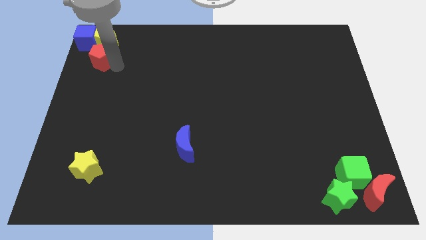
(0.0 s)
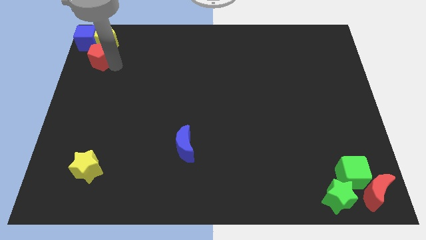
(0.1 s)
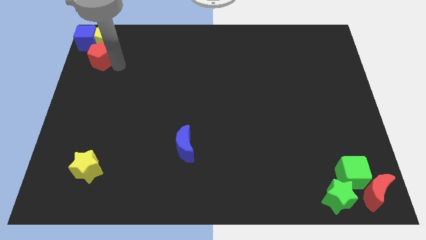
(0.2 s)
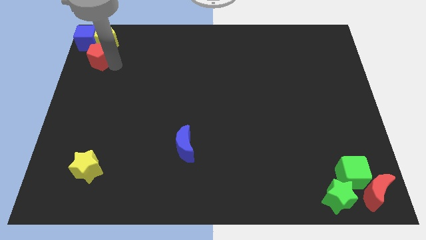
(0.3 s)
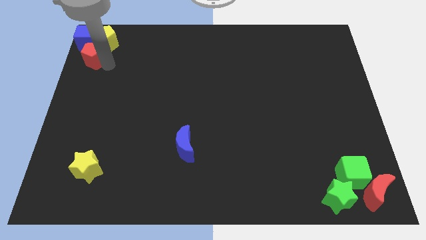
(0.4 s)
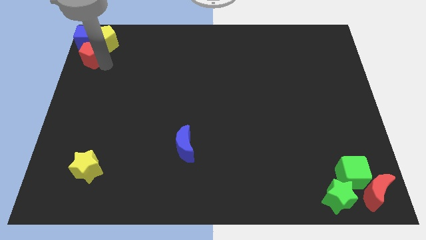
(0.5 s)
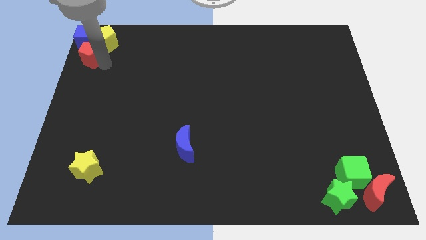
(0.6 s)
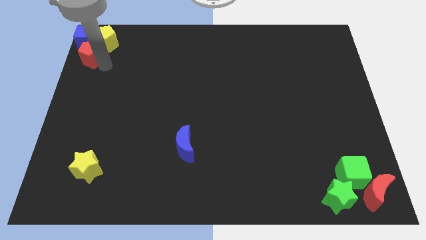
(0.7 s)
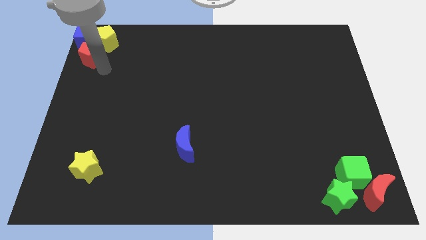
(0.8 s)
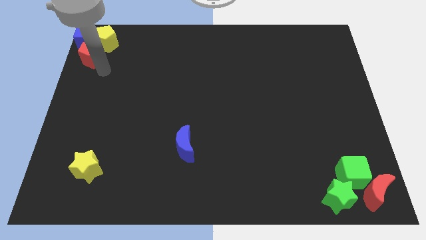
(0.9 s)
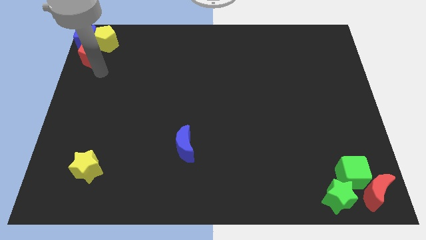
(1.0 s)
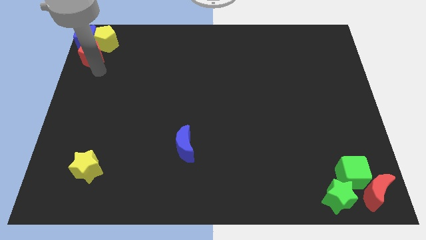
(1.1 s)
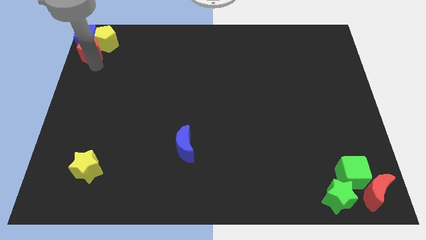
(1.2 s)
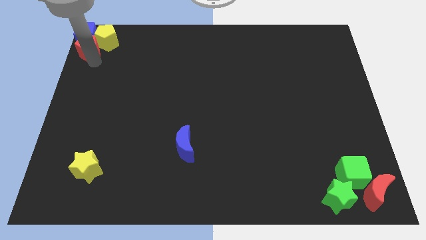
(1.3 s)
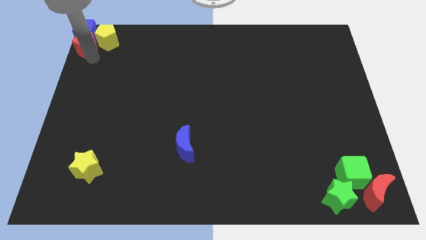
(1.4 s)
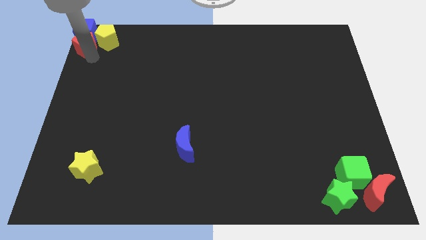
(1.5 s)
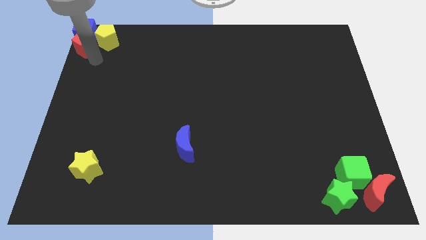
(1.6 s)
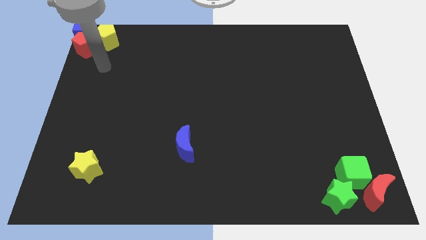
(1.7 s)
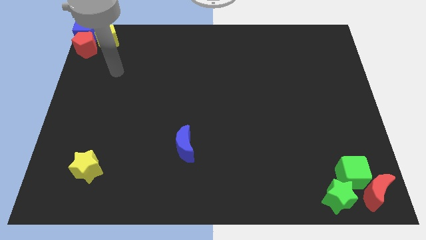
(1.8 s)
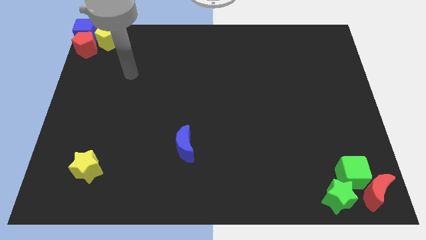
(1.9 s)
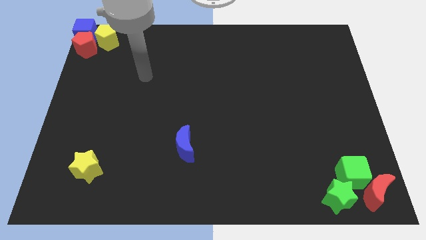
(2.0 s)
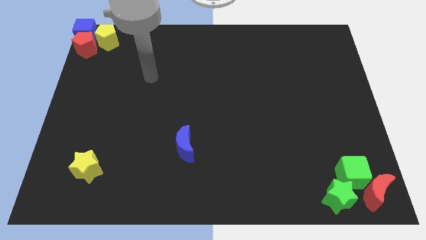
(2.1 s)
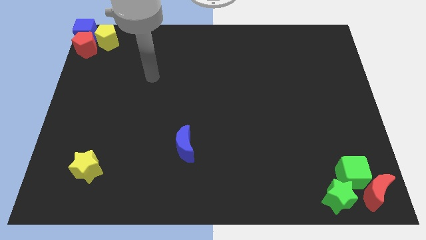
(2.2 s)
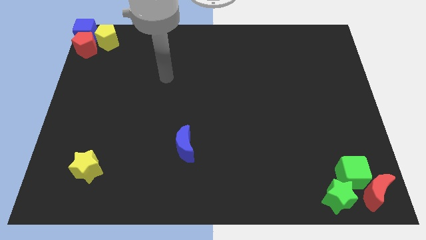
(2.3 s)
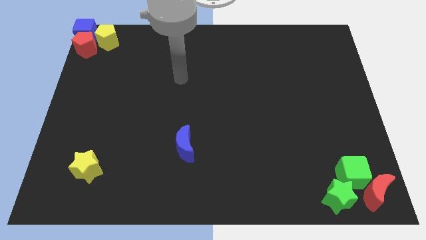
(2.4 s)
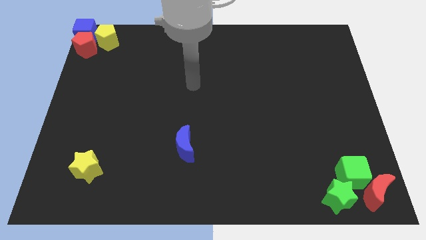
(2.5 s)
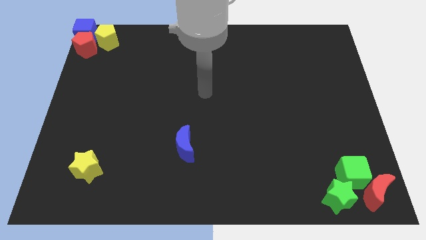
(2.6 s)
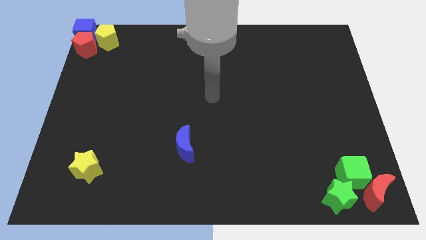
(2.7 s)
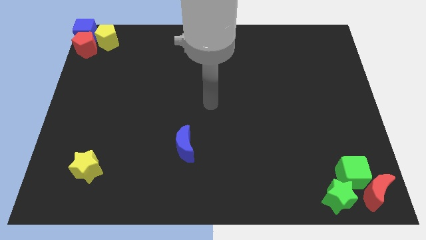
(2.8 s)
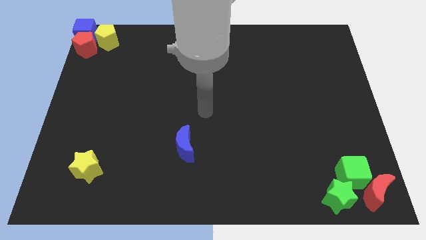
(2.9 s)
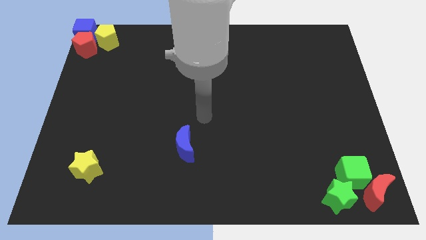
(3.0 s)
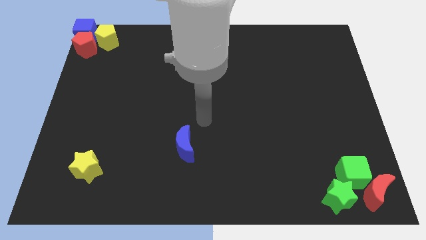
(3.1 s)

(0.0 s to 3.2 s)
push the red pentagon into the blue cube

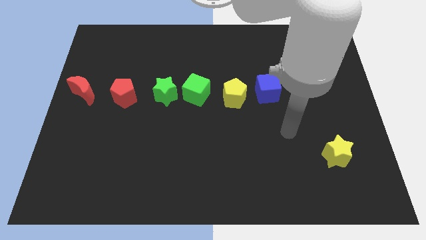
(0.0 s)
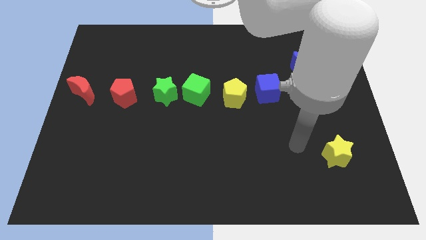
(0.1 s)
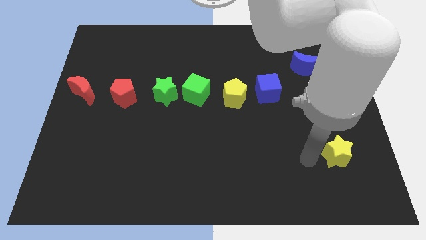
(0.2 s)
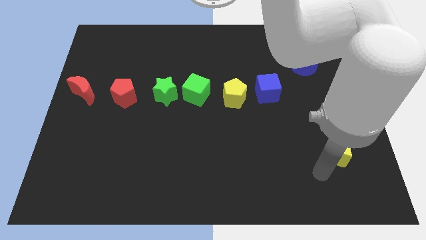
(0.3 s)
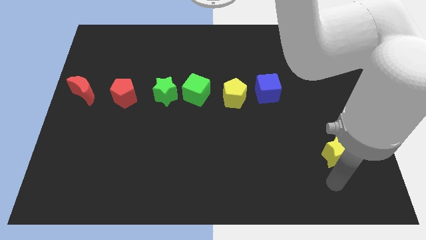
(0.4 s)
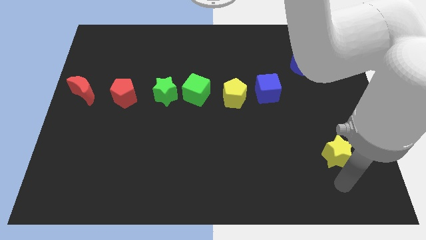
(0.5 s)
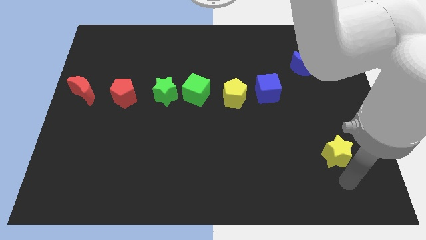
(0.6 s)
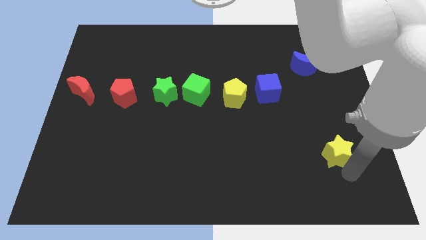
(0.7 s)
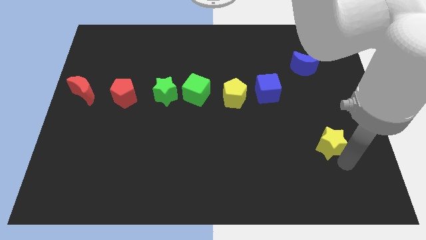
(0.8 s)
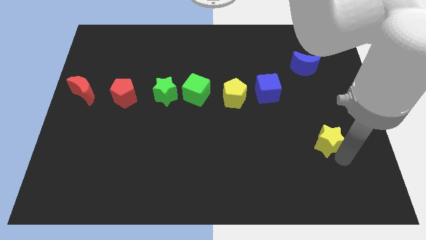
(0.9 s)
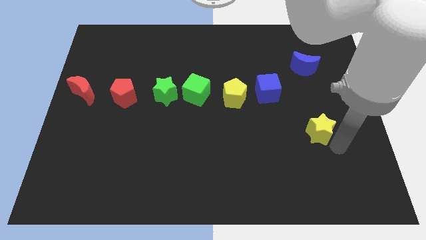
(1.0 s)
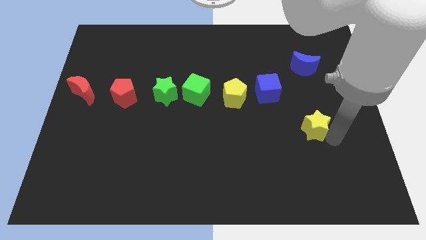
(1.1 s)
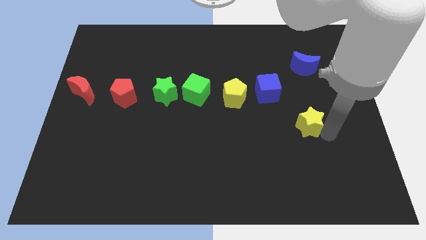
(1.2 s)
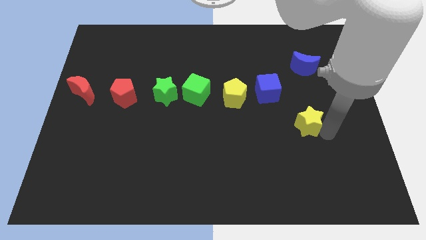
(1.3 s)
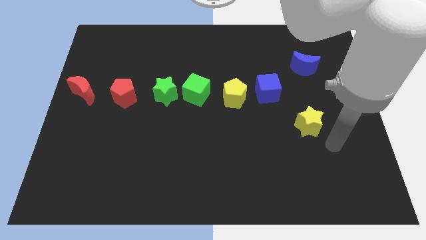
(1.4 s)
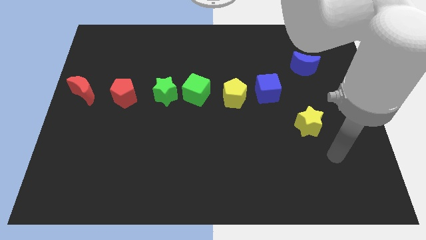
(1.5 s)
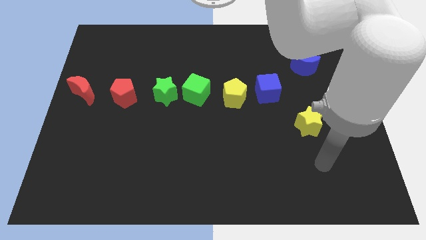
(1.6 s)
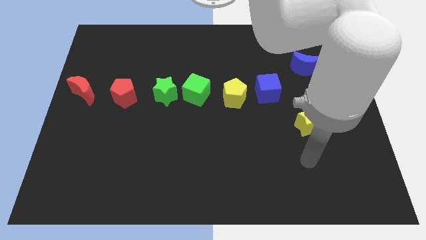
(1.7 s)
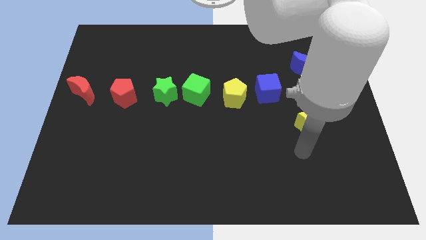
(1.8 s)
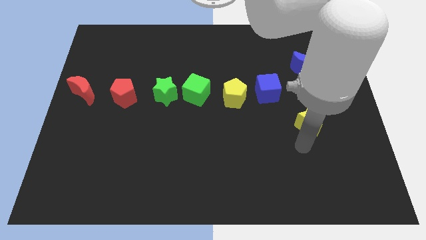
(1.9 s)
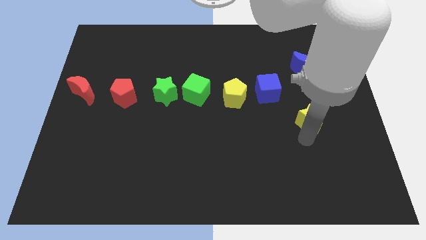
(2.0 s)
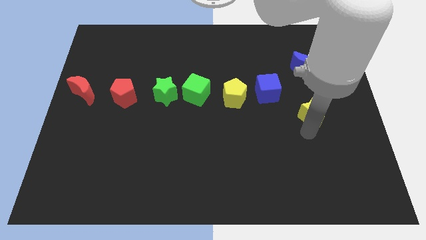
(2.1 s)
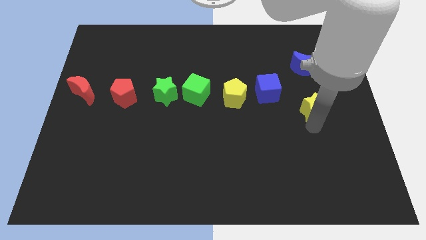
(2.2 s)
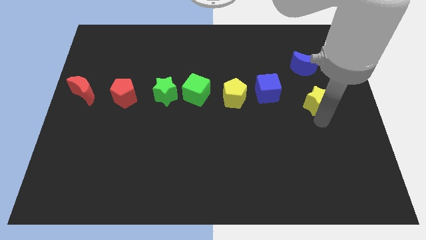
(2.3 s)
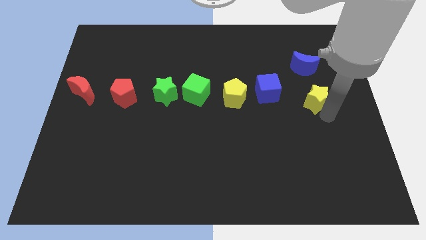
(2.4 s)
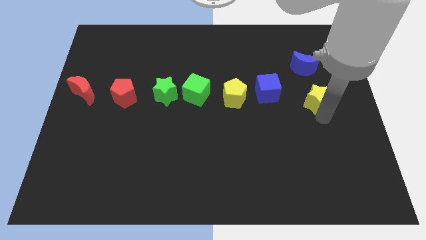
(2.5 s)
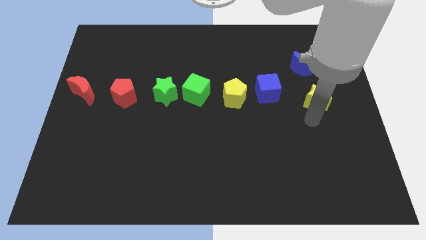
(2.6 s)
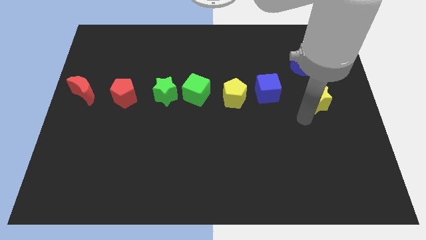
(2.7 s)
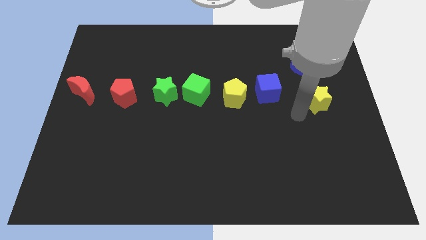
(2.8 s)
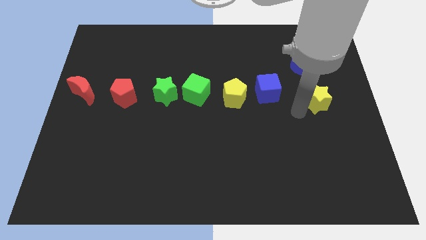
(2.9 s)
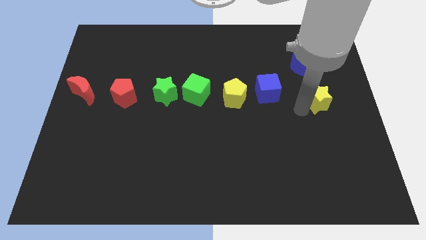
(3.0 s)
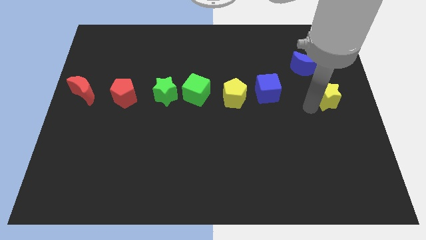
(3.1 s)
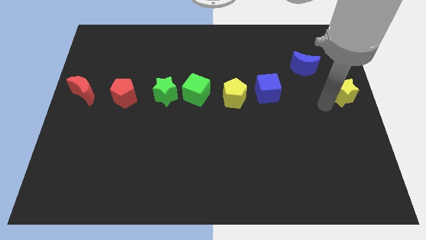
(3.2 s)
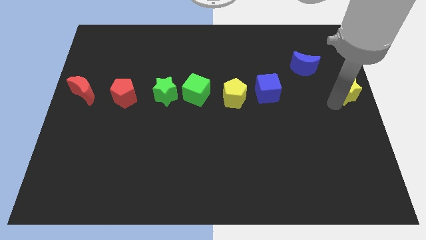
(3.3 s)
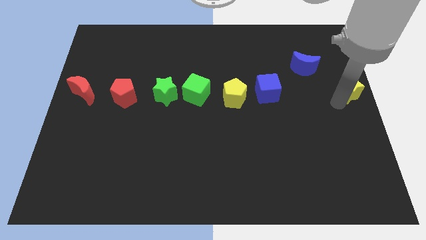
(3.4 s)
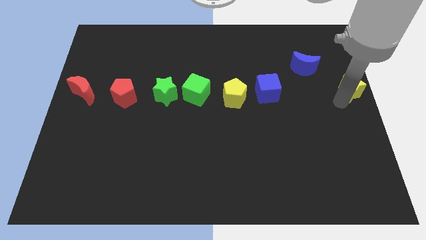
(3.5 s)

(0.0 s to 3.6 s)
push the yellow star to the center right of the board

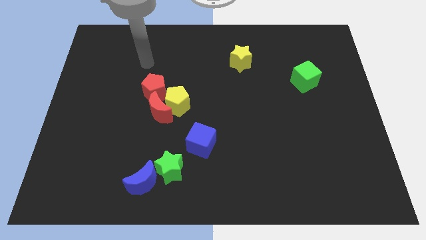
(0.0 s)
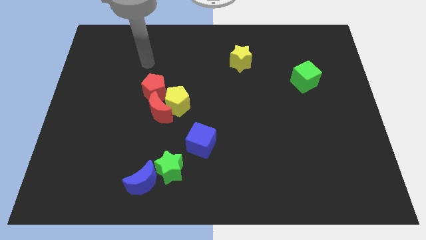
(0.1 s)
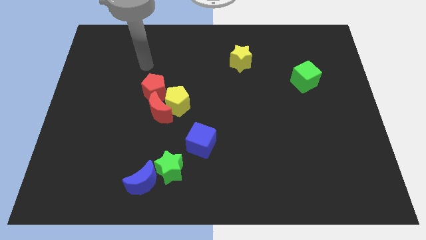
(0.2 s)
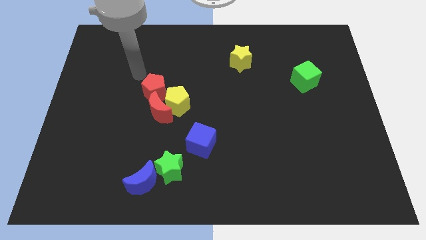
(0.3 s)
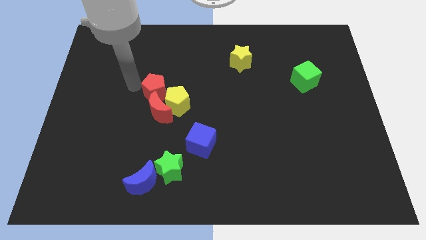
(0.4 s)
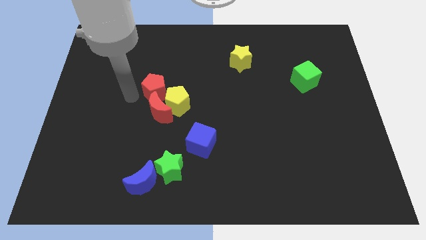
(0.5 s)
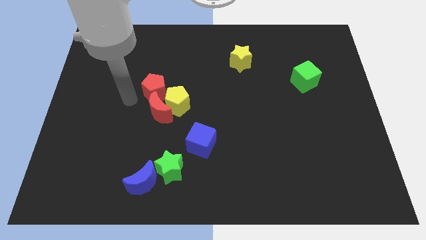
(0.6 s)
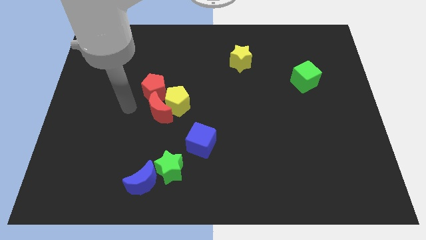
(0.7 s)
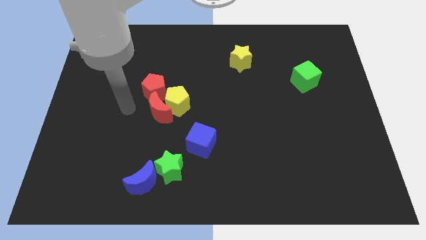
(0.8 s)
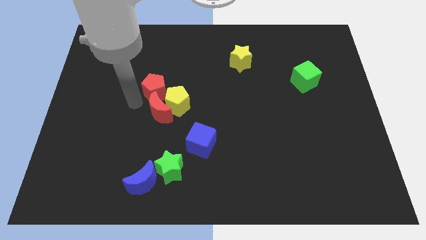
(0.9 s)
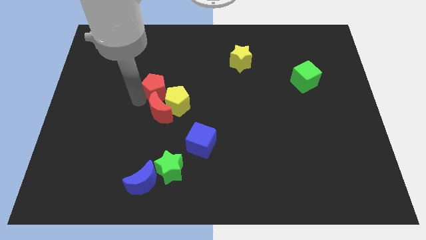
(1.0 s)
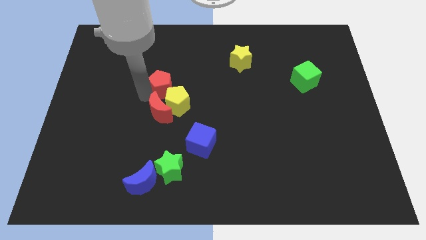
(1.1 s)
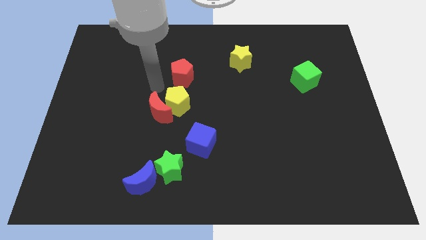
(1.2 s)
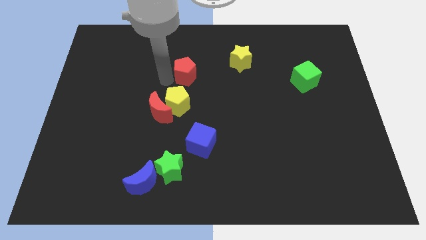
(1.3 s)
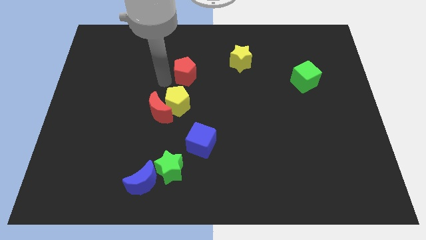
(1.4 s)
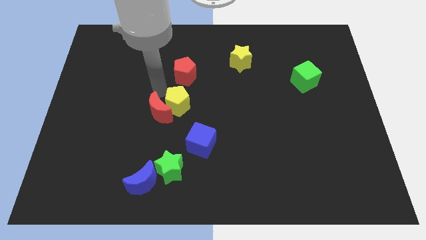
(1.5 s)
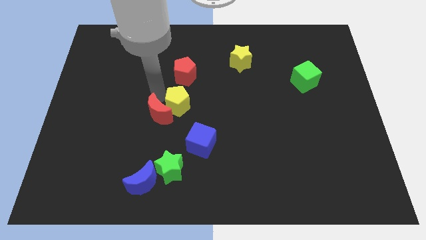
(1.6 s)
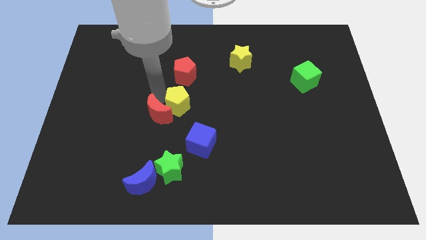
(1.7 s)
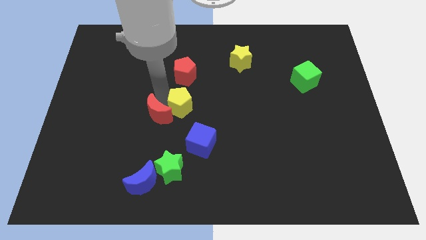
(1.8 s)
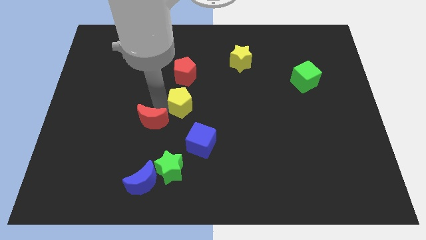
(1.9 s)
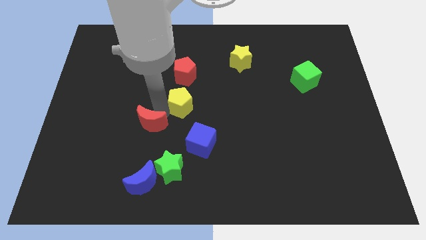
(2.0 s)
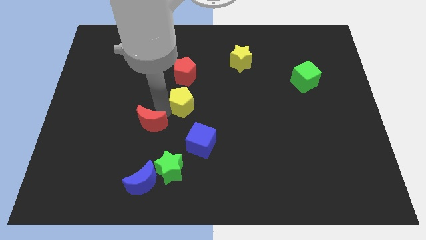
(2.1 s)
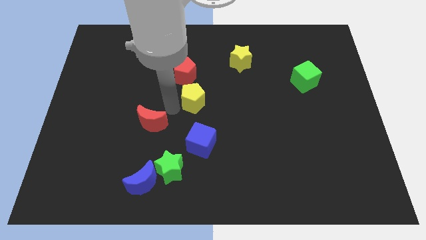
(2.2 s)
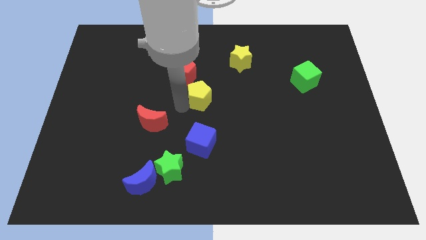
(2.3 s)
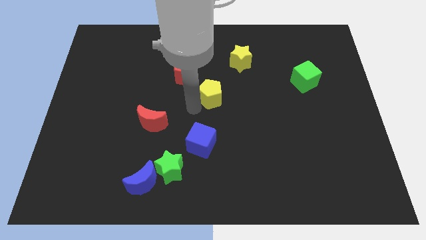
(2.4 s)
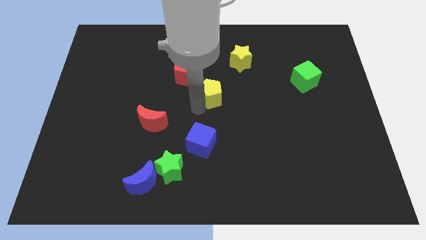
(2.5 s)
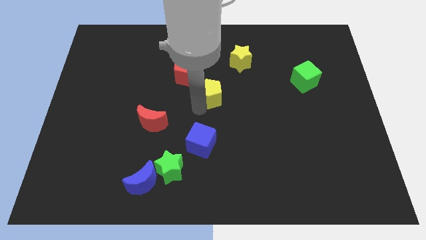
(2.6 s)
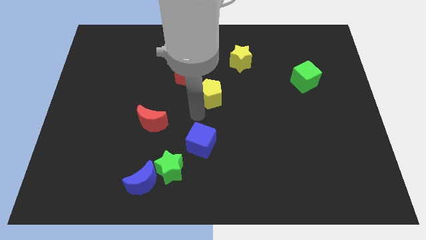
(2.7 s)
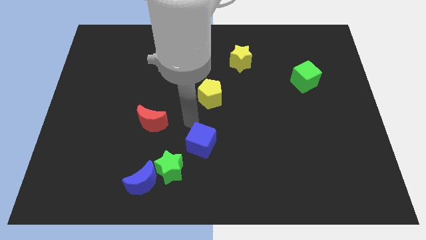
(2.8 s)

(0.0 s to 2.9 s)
separate the red moon and yellow pentagon
